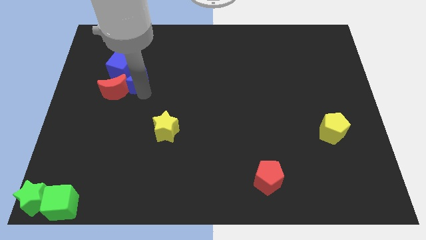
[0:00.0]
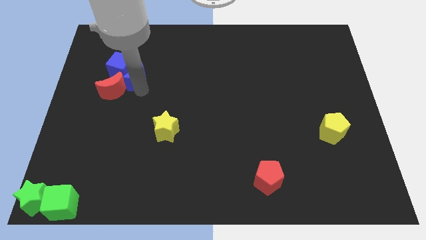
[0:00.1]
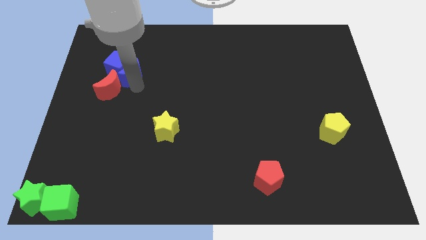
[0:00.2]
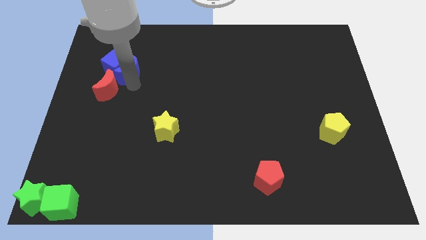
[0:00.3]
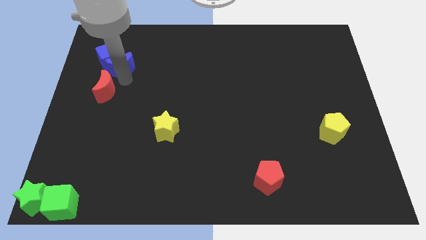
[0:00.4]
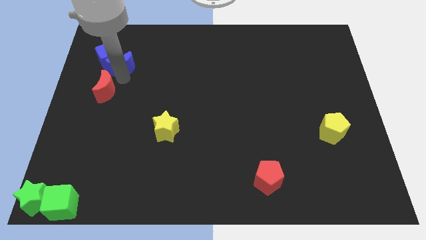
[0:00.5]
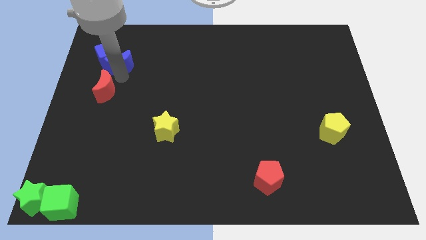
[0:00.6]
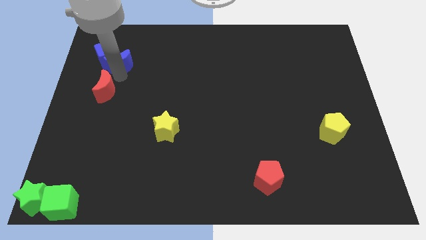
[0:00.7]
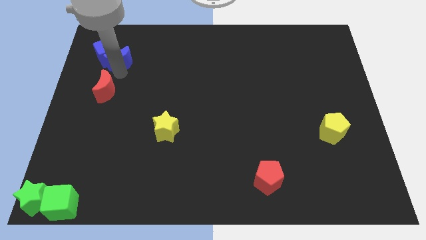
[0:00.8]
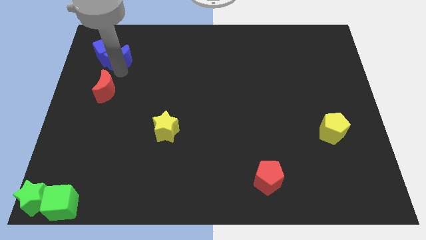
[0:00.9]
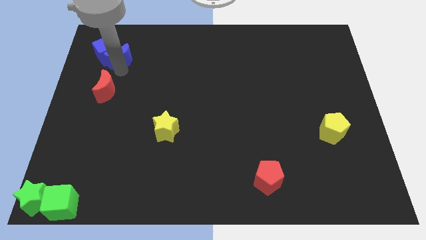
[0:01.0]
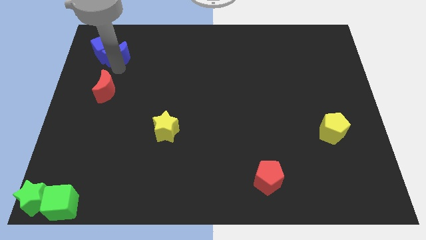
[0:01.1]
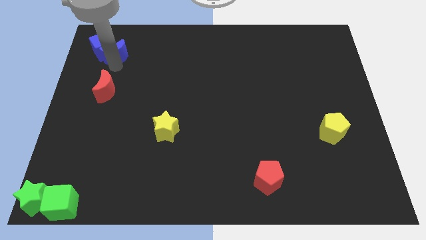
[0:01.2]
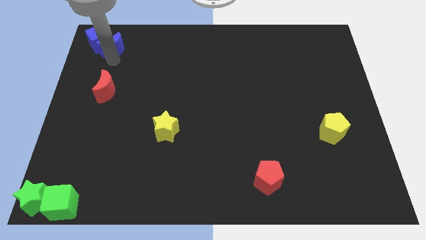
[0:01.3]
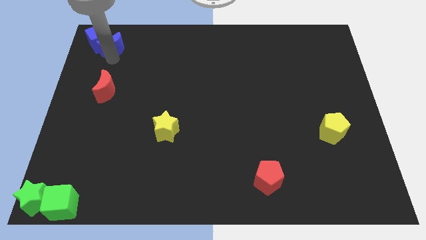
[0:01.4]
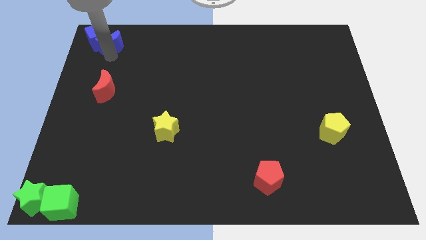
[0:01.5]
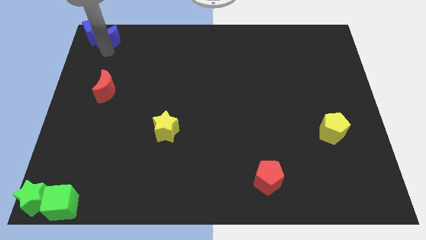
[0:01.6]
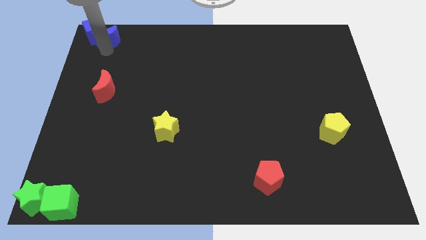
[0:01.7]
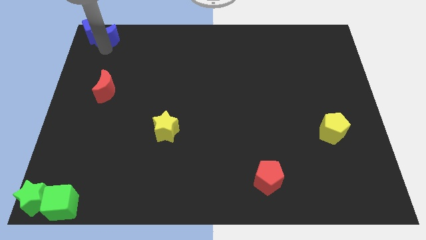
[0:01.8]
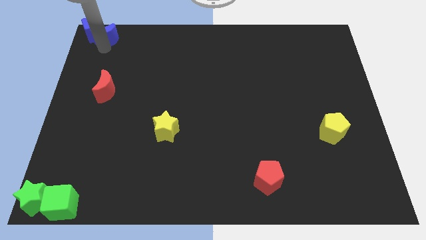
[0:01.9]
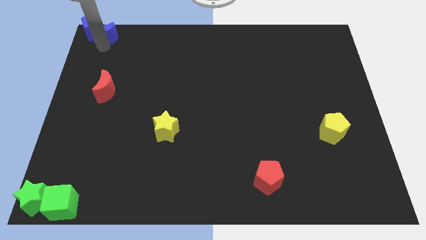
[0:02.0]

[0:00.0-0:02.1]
push the blue blocks to the top left side of the board

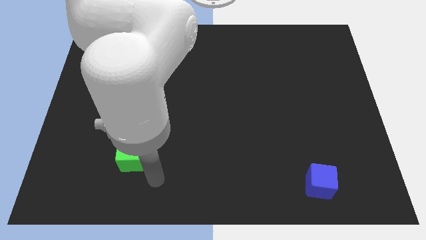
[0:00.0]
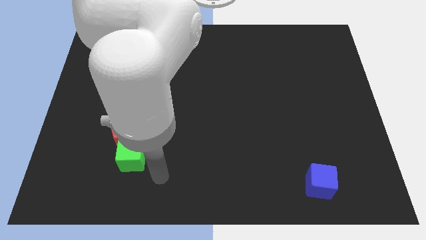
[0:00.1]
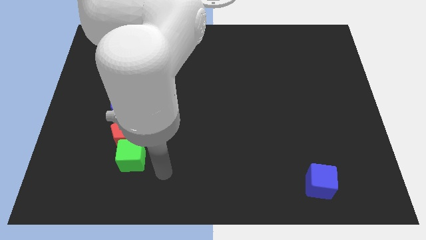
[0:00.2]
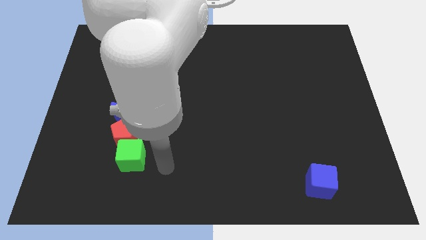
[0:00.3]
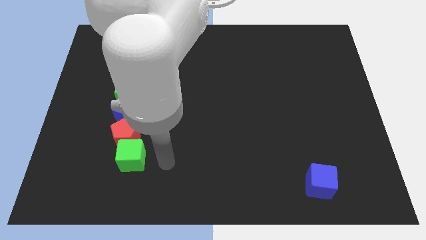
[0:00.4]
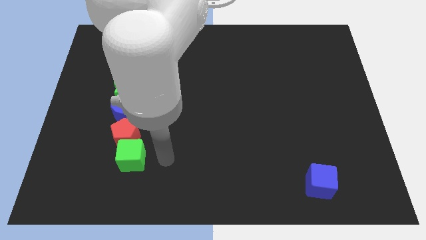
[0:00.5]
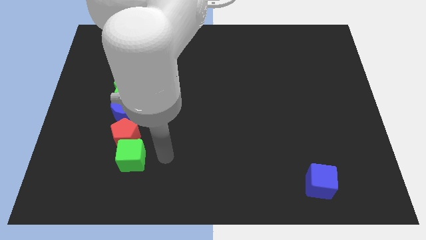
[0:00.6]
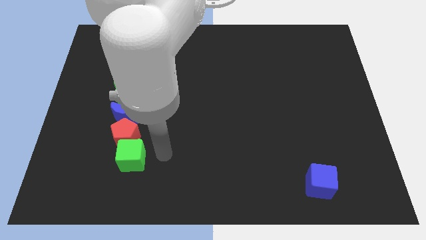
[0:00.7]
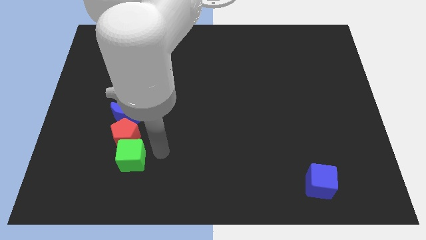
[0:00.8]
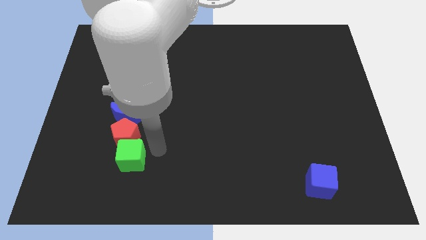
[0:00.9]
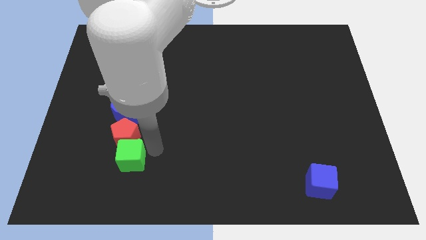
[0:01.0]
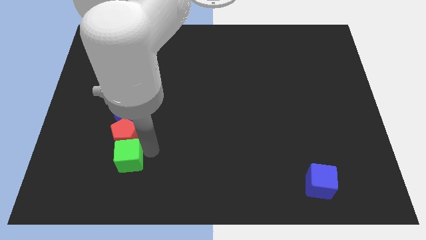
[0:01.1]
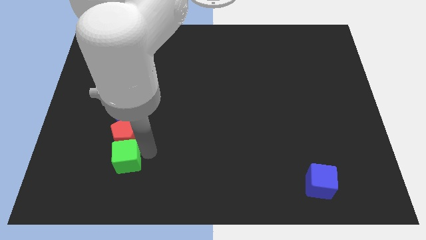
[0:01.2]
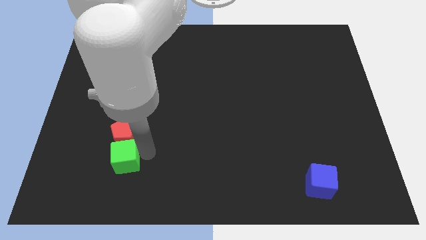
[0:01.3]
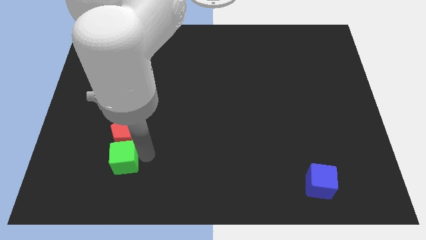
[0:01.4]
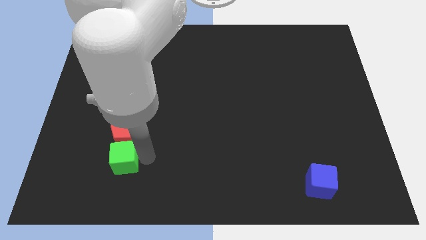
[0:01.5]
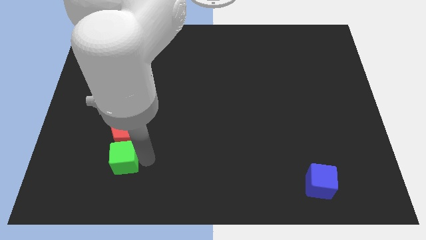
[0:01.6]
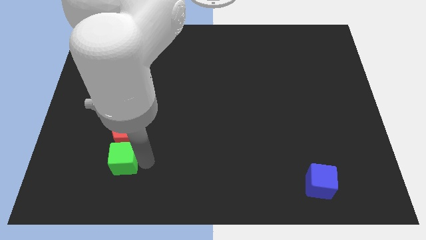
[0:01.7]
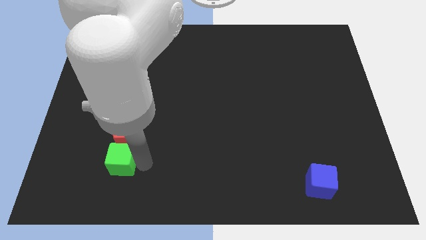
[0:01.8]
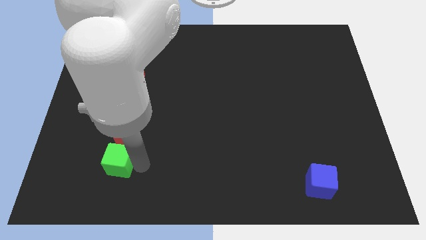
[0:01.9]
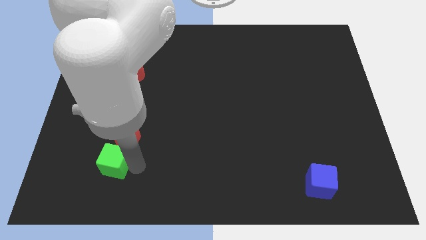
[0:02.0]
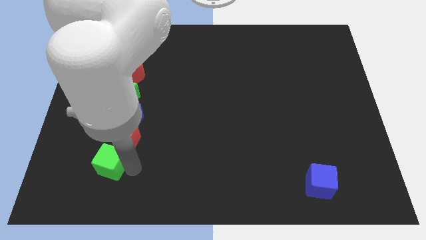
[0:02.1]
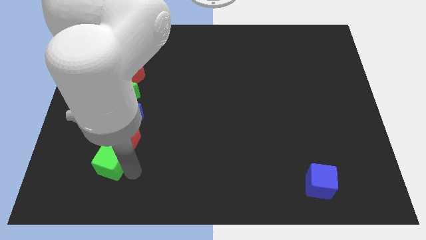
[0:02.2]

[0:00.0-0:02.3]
push the green cube slightly to the left side of the board

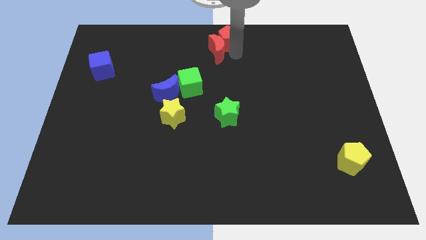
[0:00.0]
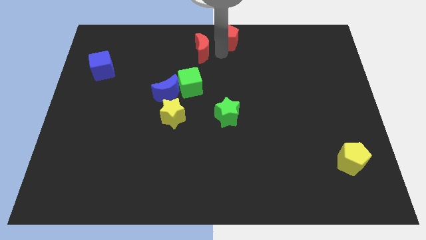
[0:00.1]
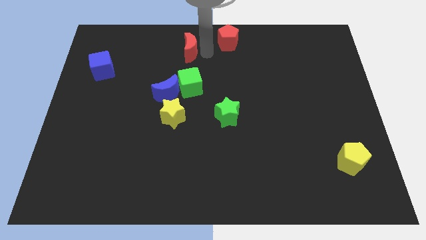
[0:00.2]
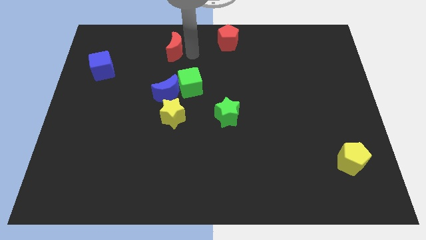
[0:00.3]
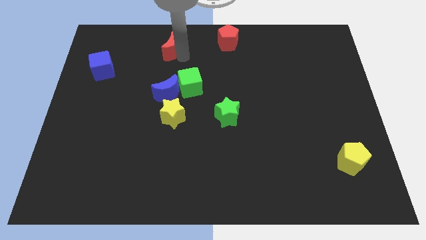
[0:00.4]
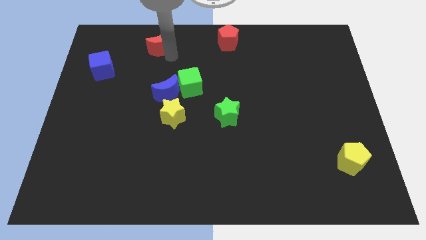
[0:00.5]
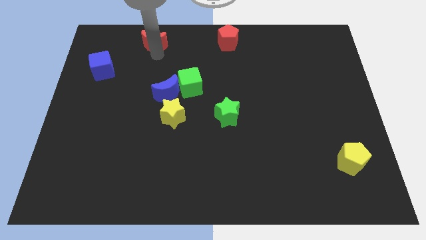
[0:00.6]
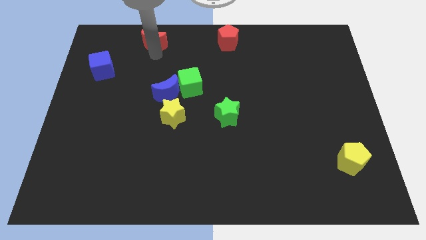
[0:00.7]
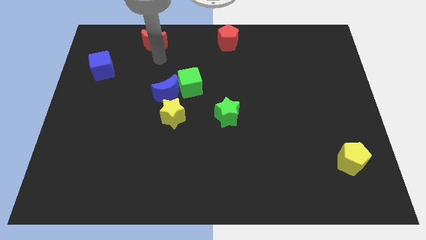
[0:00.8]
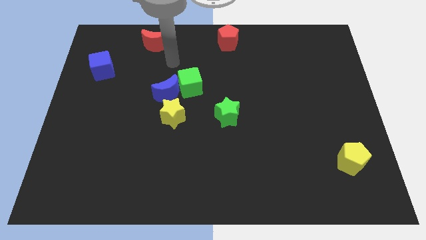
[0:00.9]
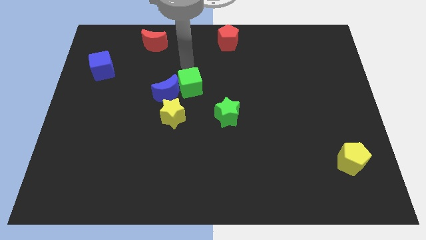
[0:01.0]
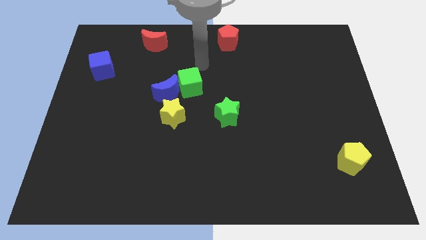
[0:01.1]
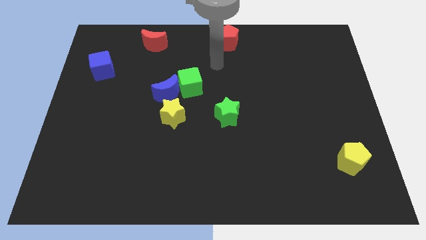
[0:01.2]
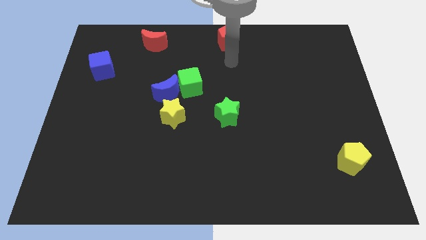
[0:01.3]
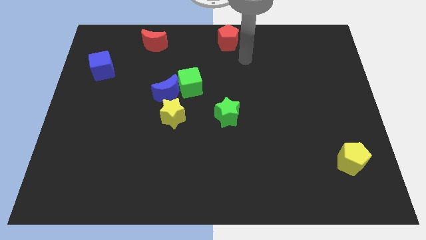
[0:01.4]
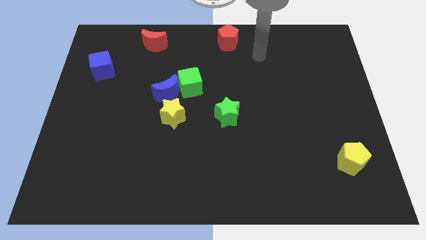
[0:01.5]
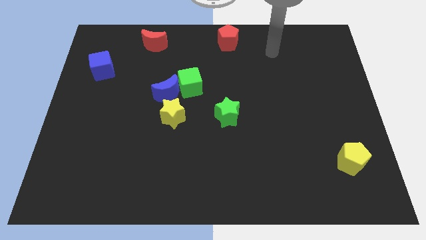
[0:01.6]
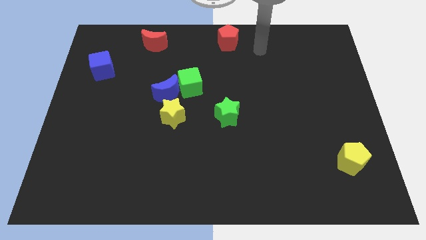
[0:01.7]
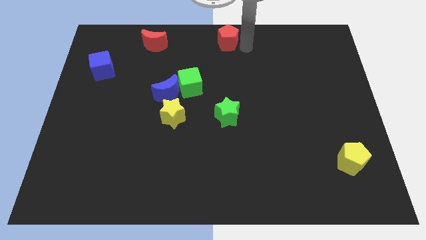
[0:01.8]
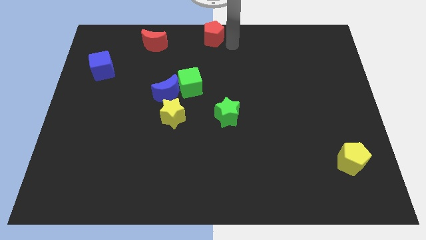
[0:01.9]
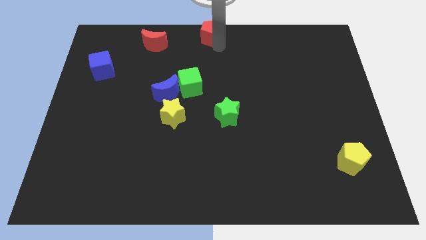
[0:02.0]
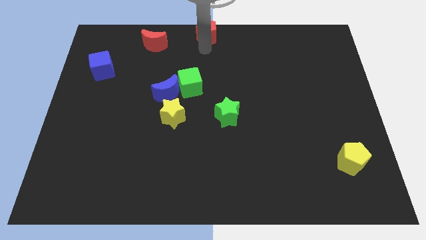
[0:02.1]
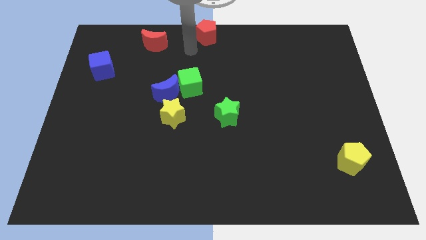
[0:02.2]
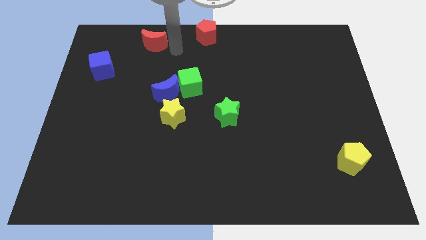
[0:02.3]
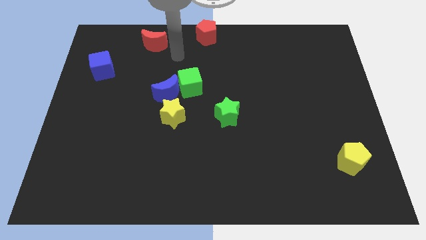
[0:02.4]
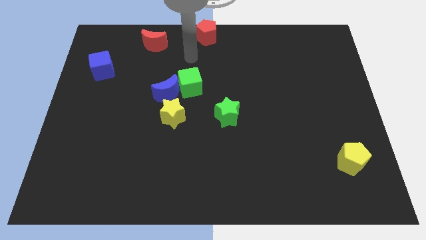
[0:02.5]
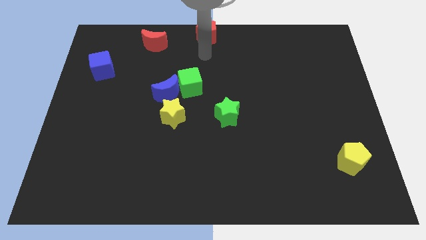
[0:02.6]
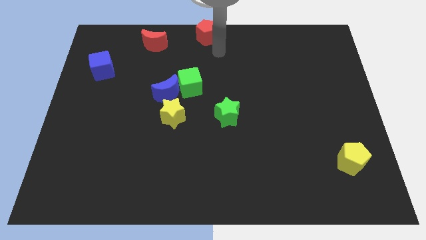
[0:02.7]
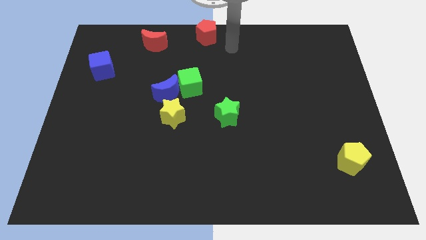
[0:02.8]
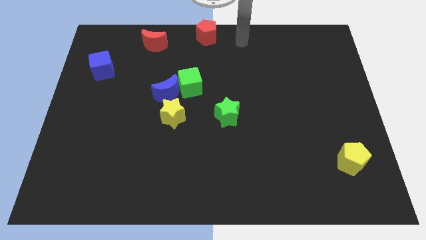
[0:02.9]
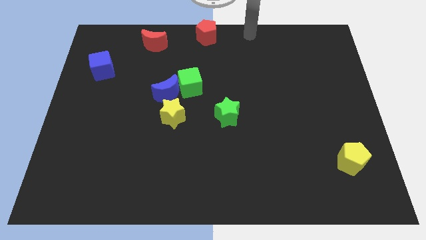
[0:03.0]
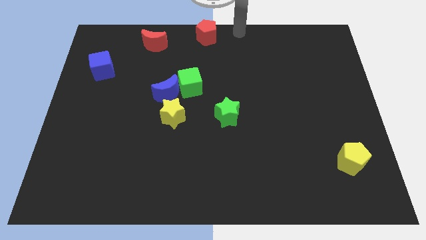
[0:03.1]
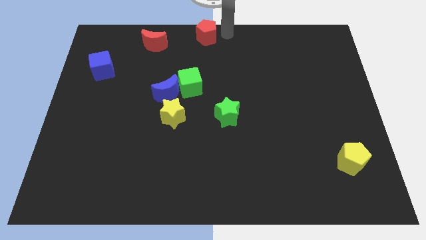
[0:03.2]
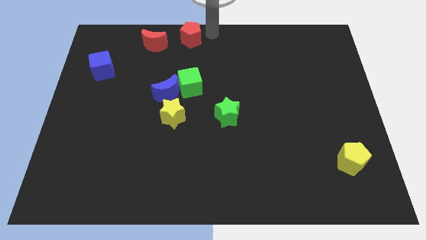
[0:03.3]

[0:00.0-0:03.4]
separate the red moon and the red pentagon from each other

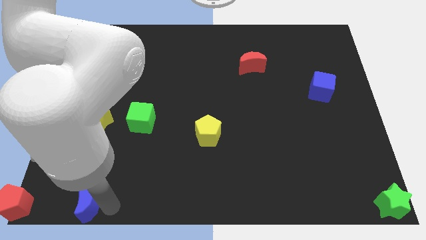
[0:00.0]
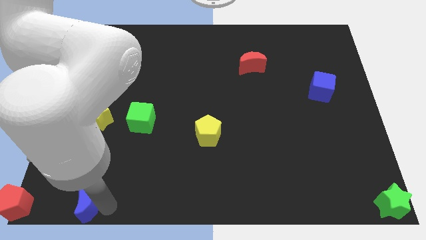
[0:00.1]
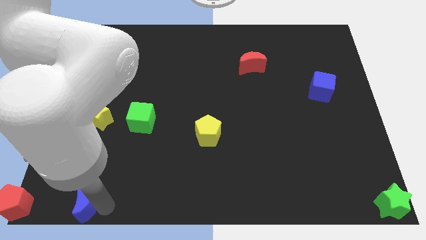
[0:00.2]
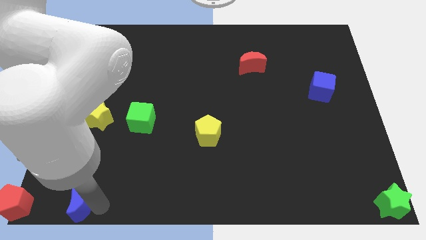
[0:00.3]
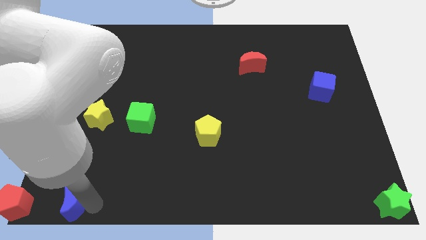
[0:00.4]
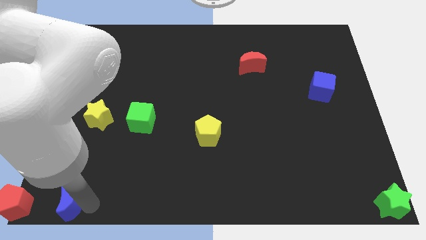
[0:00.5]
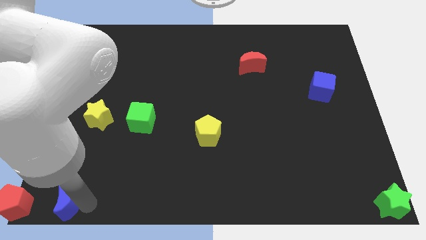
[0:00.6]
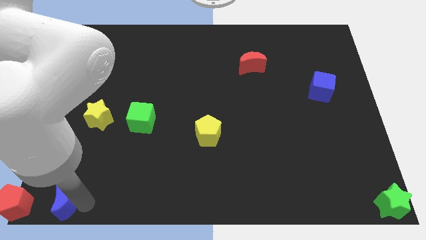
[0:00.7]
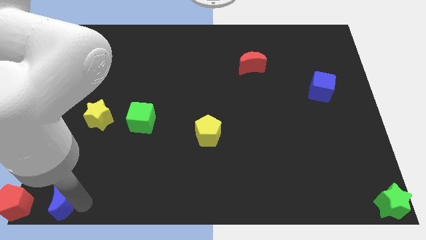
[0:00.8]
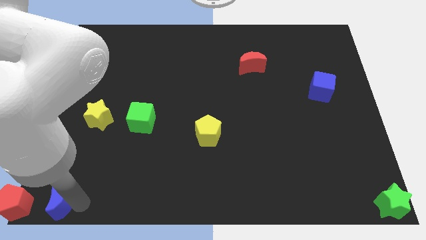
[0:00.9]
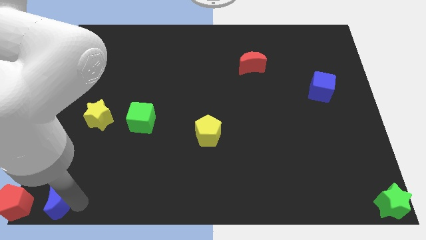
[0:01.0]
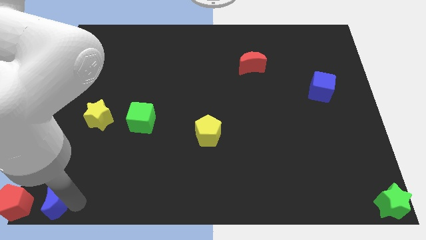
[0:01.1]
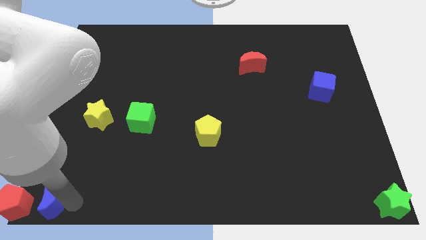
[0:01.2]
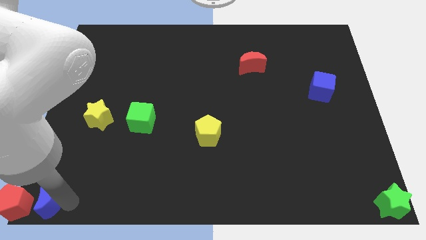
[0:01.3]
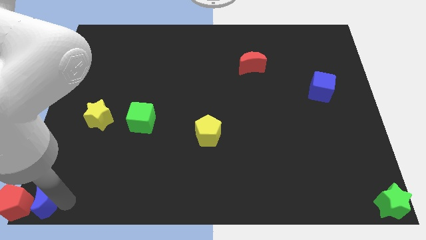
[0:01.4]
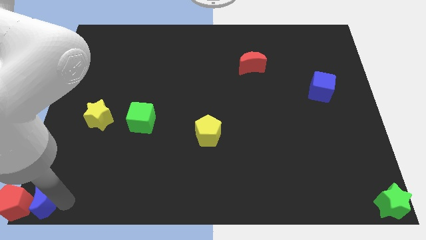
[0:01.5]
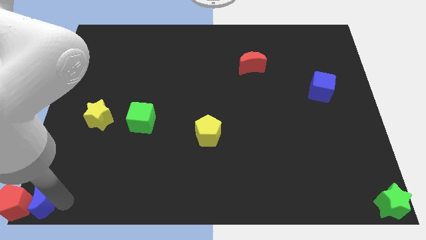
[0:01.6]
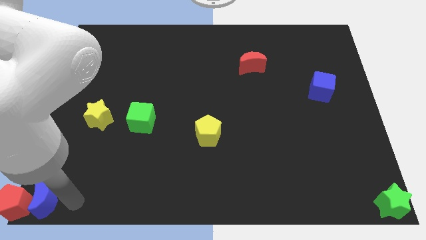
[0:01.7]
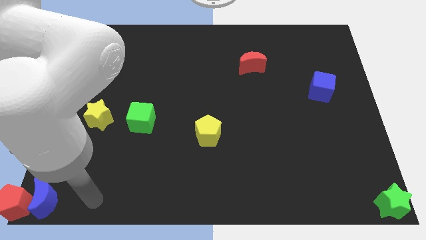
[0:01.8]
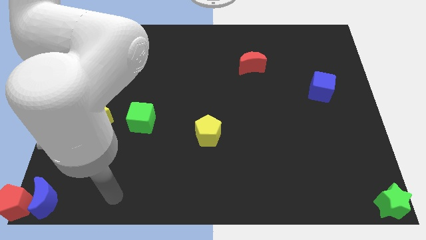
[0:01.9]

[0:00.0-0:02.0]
push the blue moon to the right side of the red pentagon
